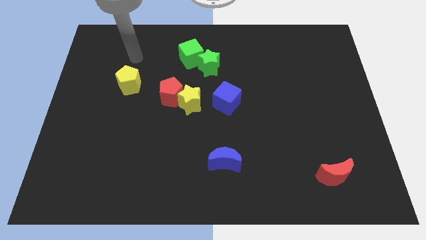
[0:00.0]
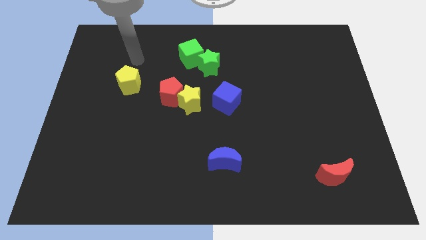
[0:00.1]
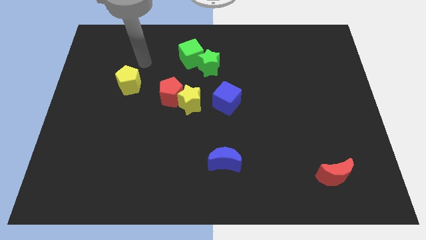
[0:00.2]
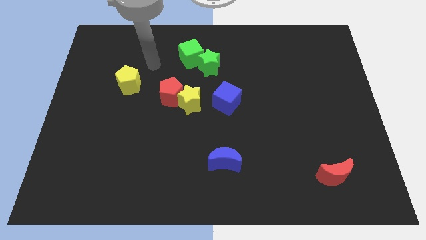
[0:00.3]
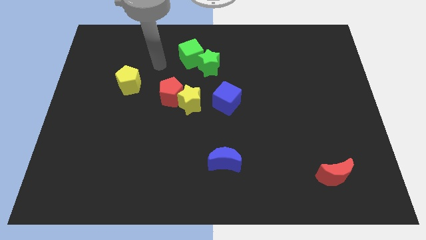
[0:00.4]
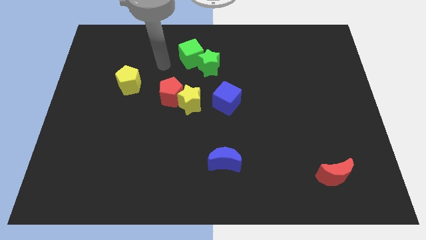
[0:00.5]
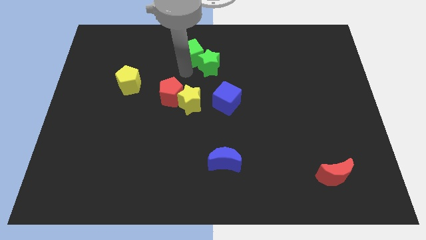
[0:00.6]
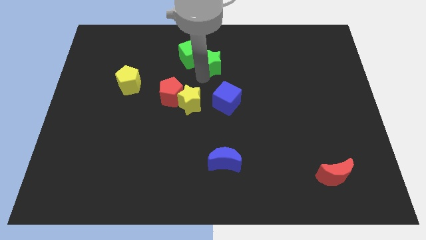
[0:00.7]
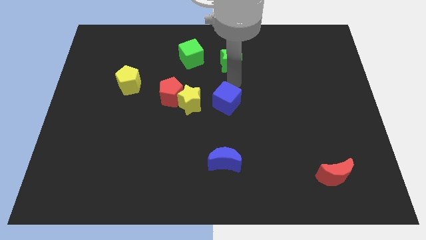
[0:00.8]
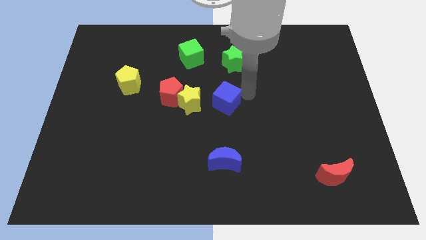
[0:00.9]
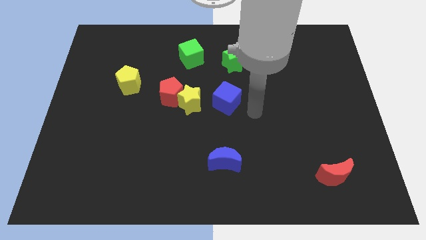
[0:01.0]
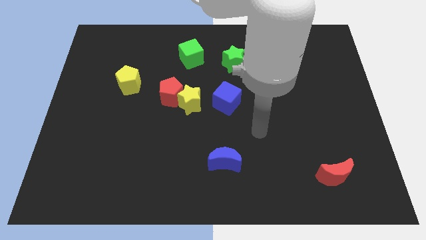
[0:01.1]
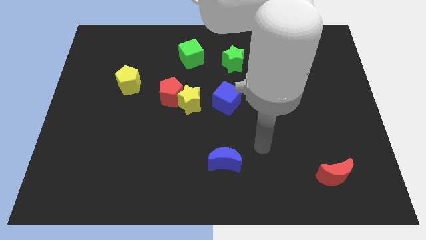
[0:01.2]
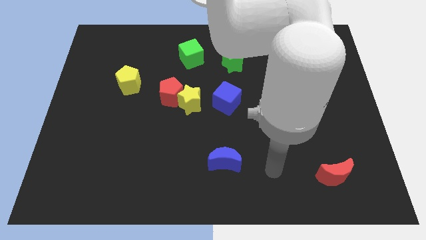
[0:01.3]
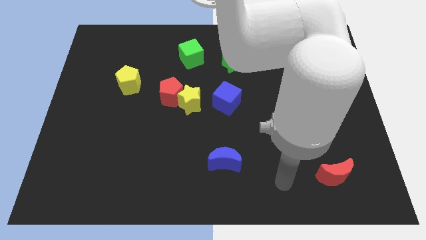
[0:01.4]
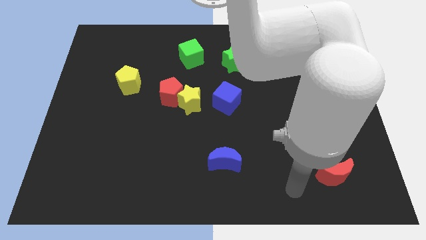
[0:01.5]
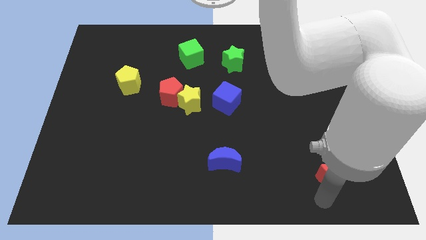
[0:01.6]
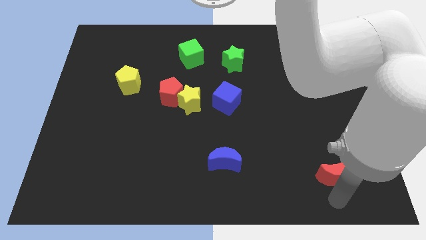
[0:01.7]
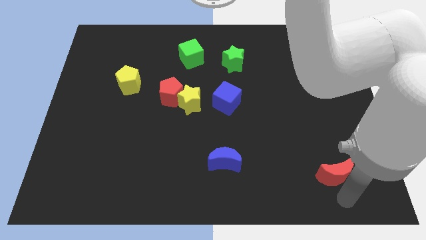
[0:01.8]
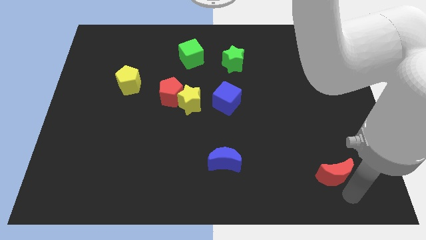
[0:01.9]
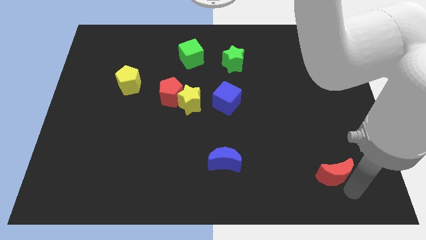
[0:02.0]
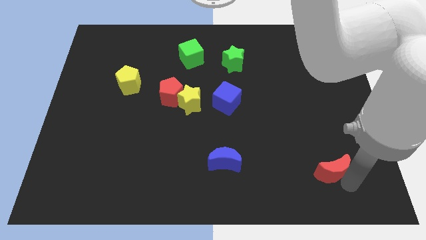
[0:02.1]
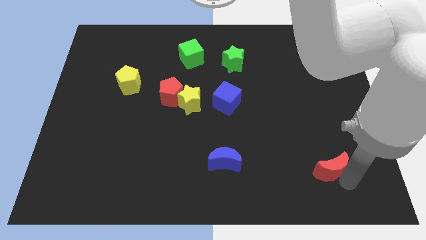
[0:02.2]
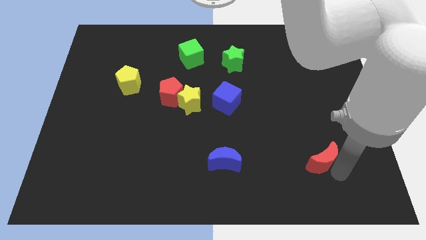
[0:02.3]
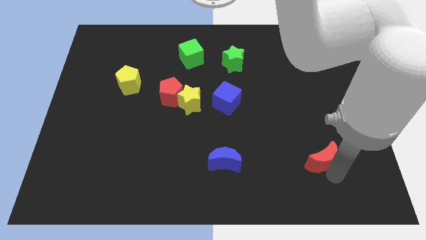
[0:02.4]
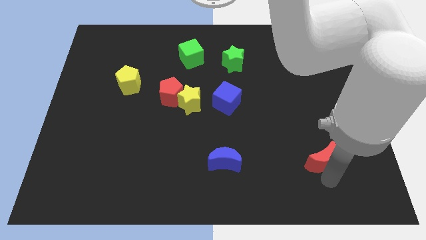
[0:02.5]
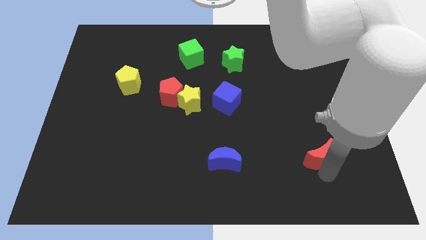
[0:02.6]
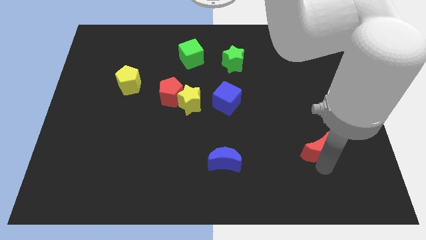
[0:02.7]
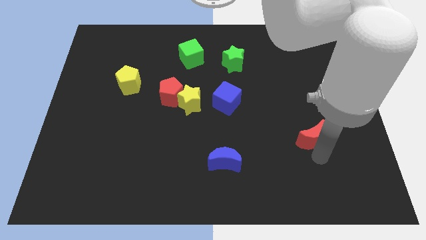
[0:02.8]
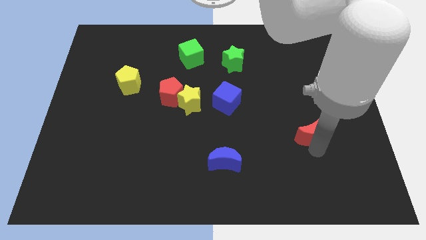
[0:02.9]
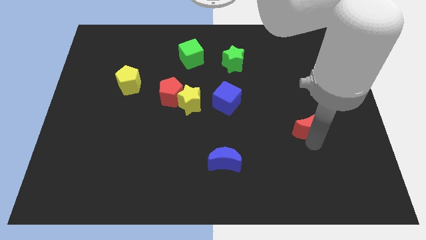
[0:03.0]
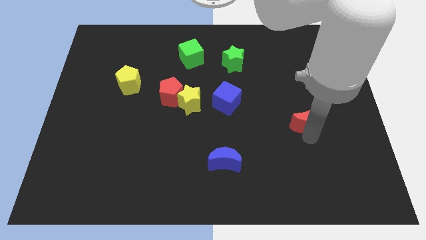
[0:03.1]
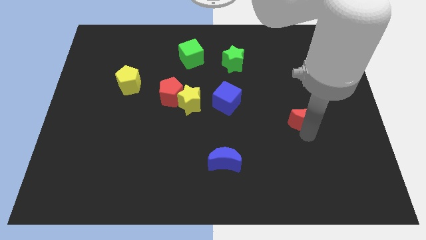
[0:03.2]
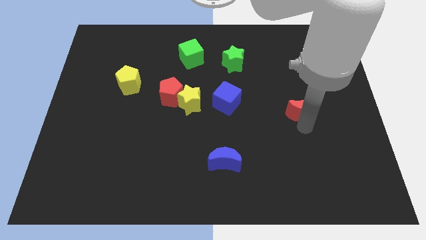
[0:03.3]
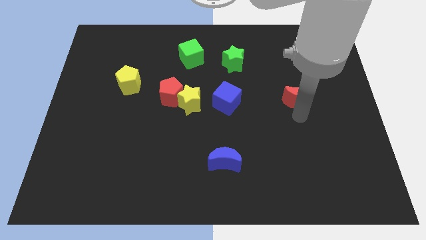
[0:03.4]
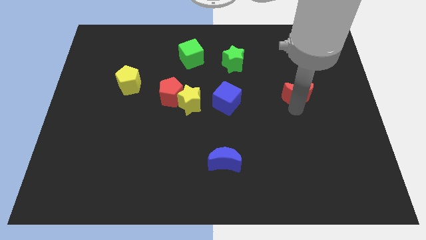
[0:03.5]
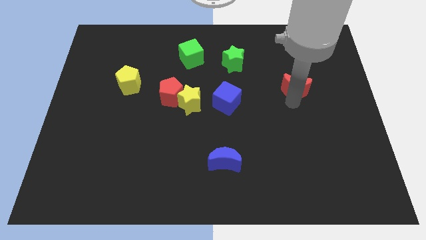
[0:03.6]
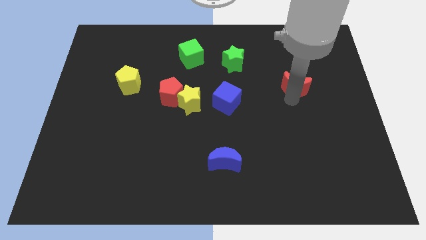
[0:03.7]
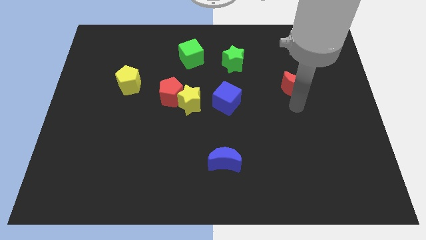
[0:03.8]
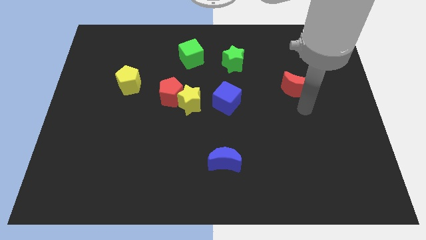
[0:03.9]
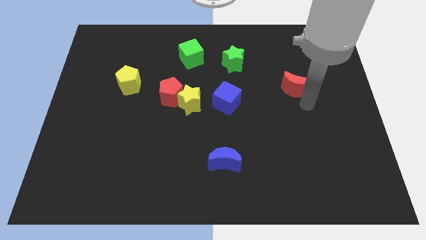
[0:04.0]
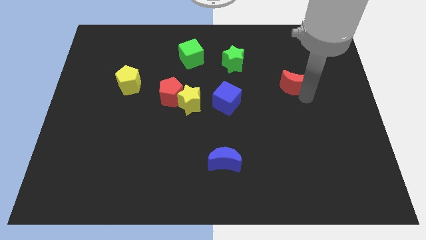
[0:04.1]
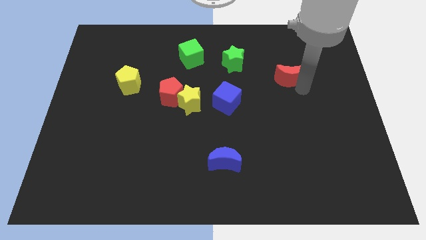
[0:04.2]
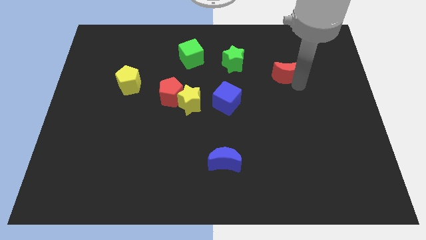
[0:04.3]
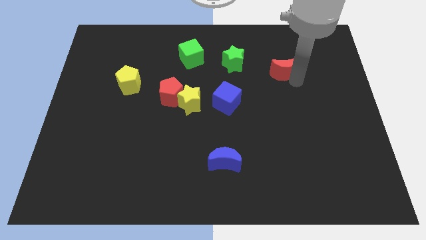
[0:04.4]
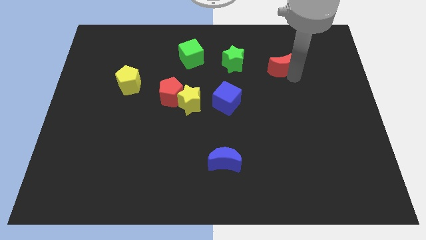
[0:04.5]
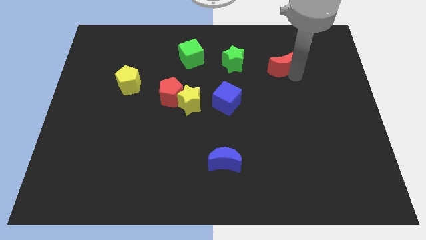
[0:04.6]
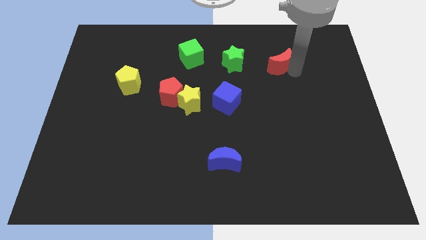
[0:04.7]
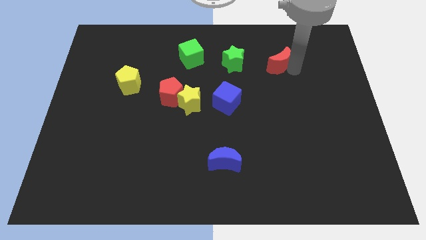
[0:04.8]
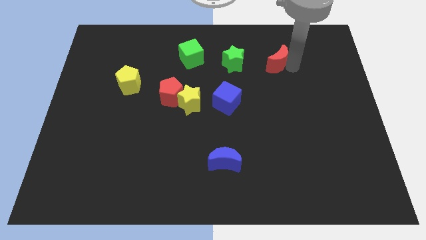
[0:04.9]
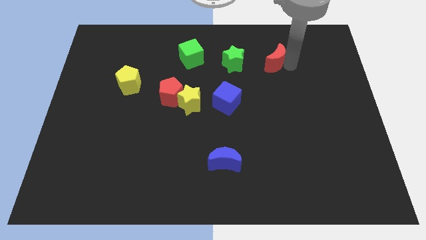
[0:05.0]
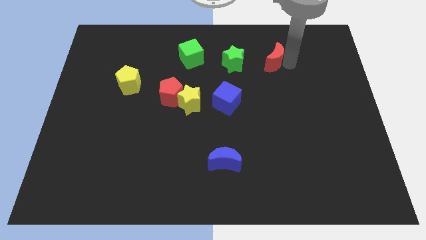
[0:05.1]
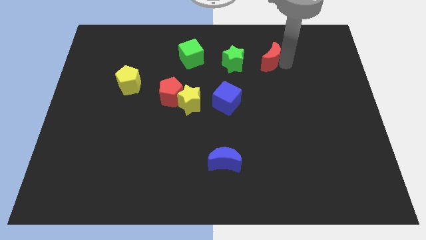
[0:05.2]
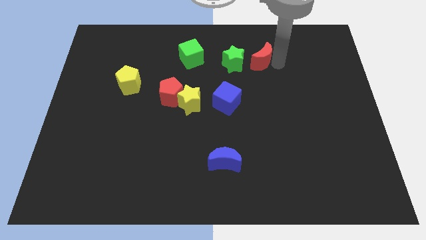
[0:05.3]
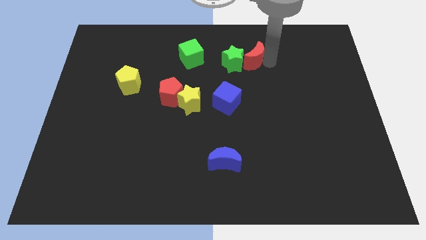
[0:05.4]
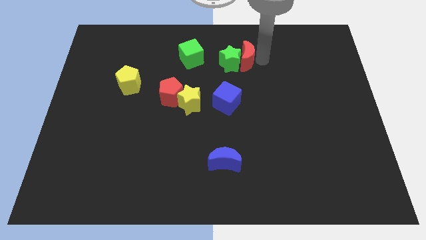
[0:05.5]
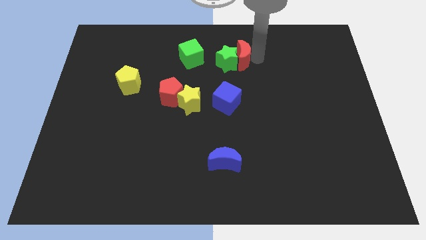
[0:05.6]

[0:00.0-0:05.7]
push the red moon next to the green star

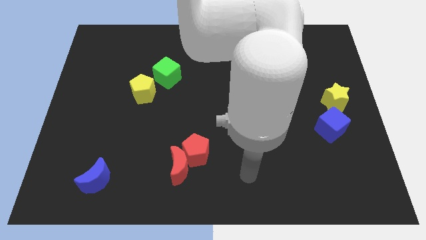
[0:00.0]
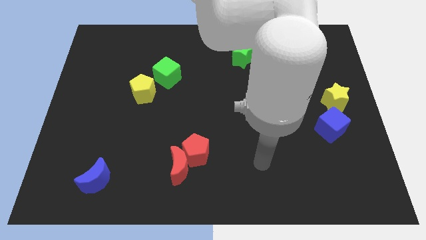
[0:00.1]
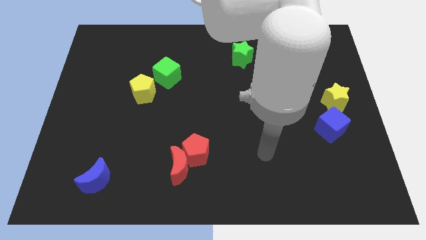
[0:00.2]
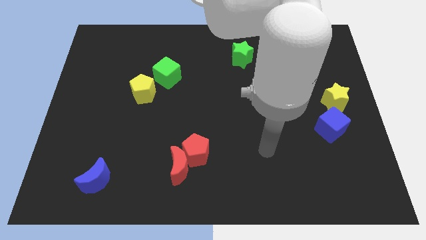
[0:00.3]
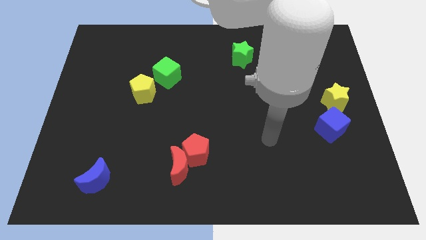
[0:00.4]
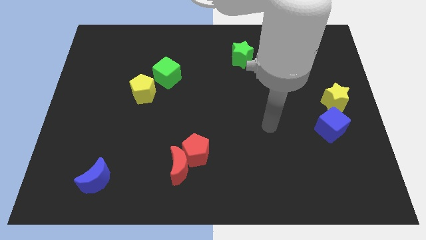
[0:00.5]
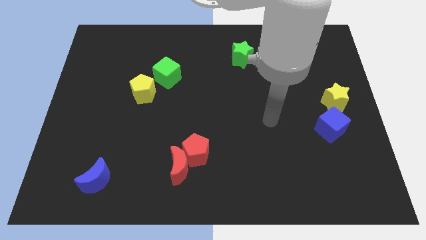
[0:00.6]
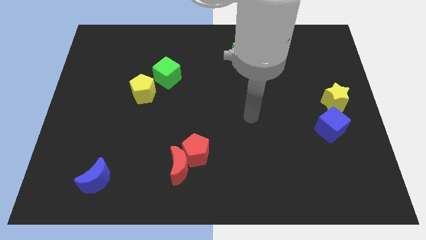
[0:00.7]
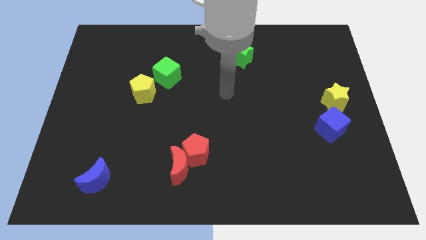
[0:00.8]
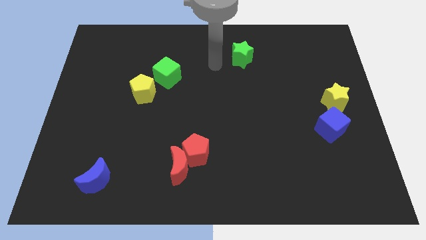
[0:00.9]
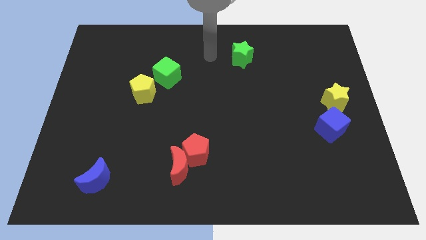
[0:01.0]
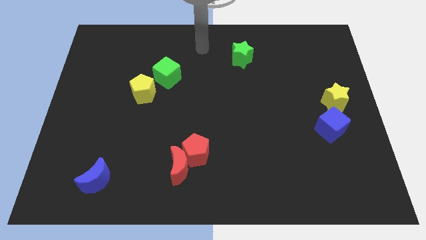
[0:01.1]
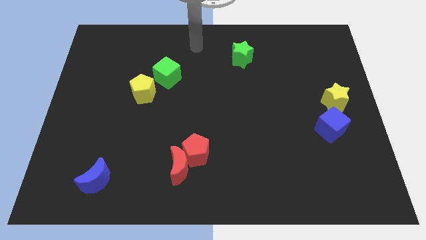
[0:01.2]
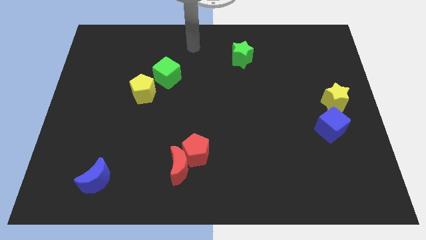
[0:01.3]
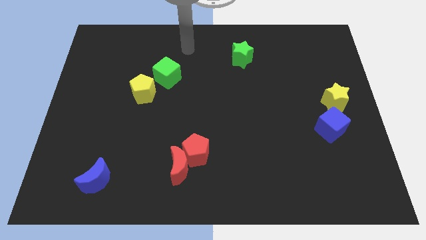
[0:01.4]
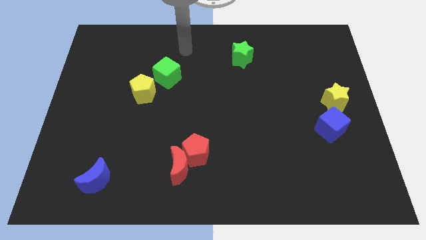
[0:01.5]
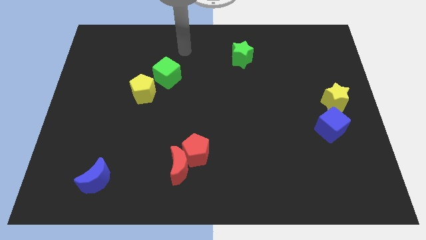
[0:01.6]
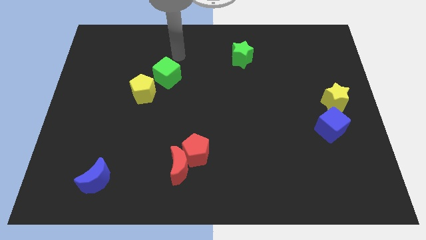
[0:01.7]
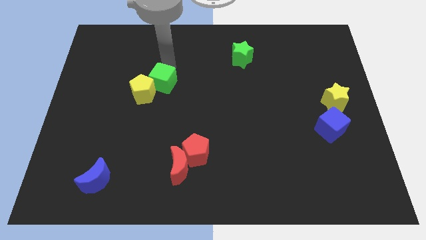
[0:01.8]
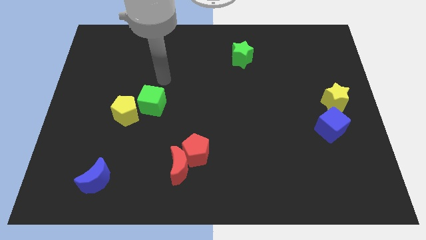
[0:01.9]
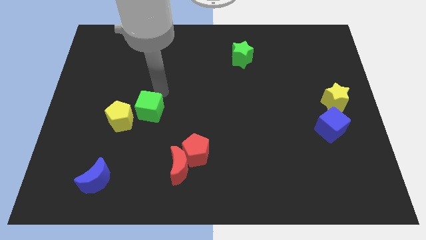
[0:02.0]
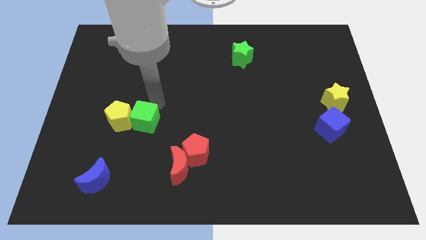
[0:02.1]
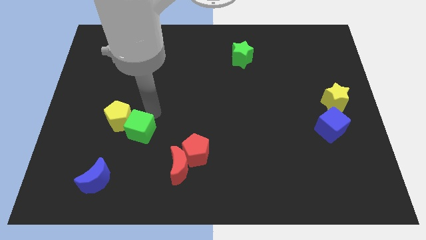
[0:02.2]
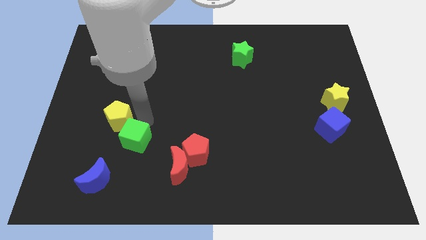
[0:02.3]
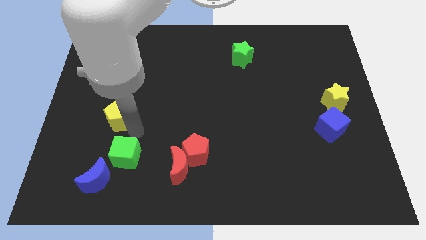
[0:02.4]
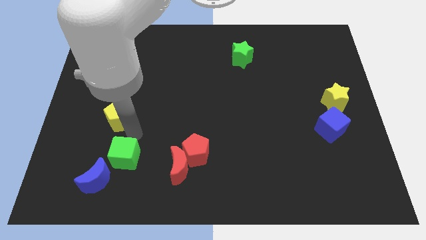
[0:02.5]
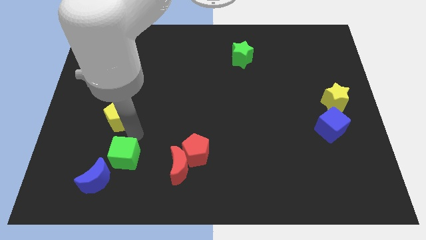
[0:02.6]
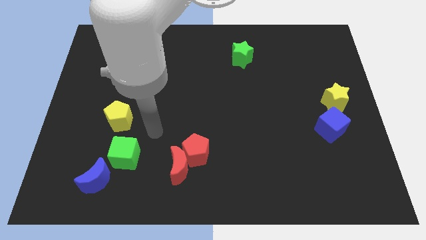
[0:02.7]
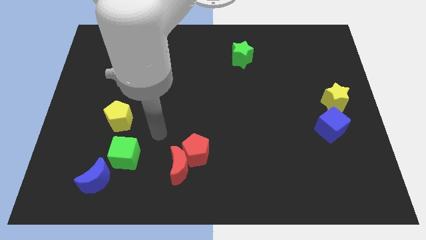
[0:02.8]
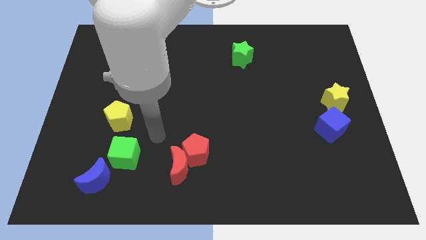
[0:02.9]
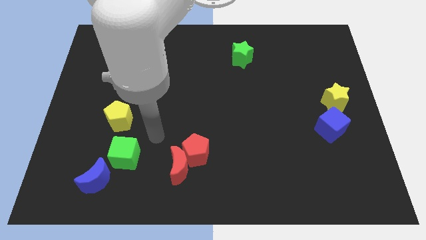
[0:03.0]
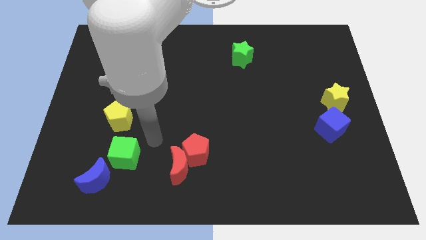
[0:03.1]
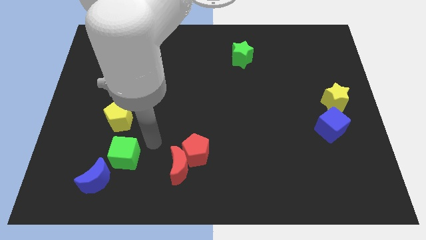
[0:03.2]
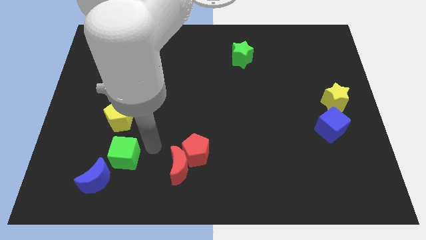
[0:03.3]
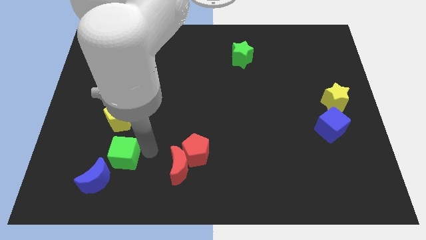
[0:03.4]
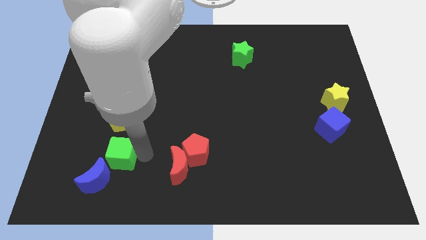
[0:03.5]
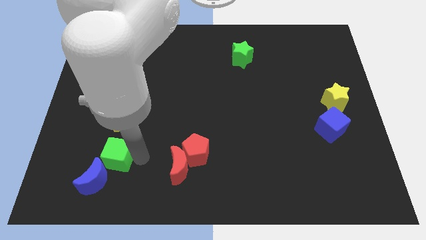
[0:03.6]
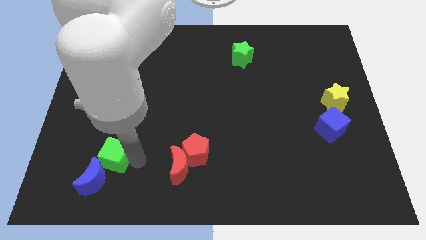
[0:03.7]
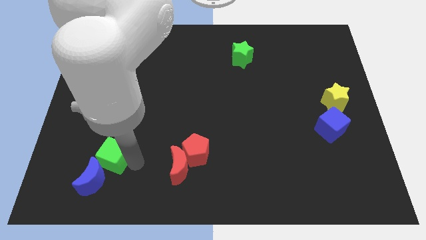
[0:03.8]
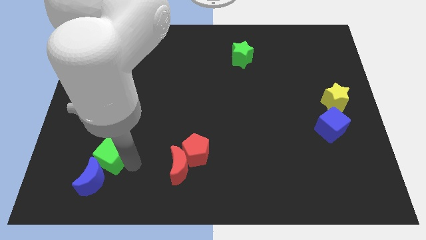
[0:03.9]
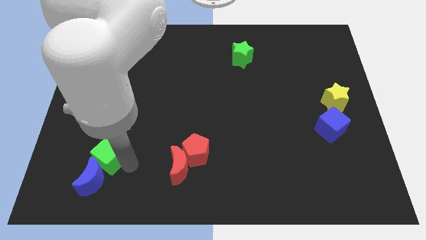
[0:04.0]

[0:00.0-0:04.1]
put the green cube towards the blue moon
